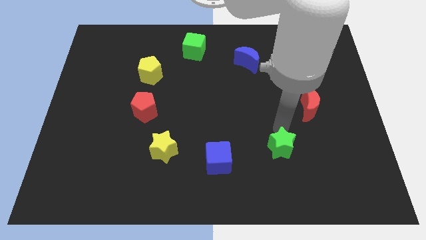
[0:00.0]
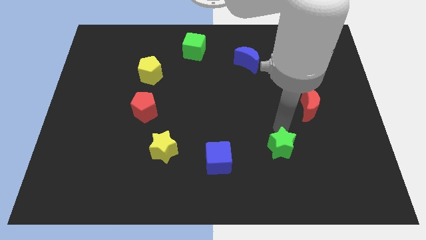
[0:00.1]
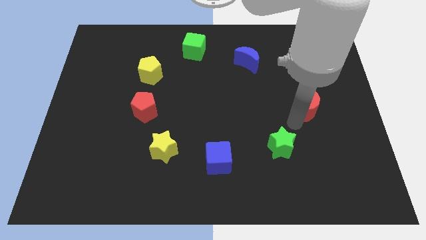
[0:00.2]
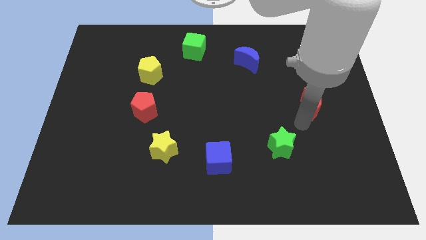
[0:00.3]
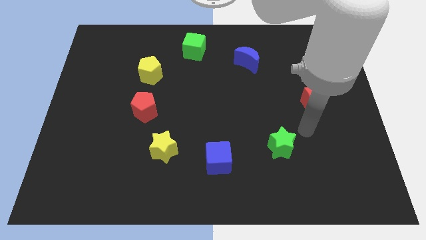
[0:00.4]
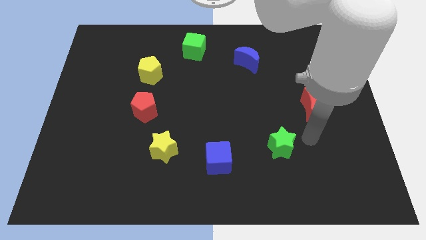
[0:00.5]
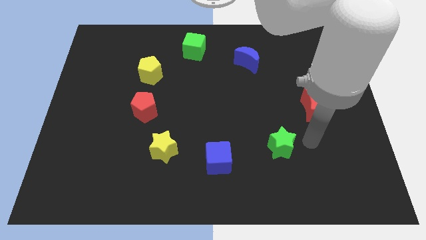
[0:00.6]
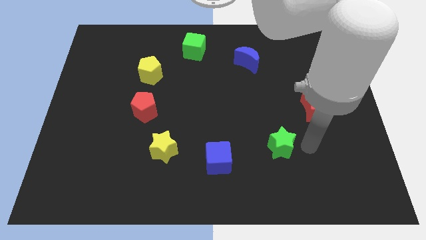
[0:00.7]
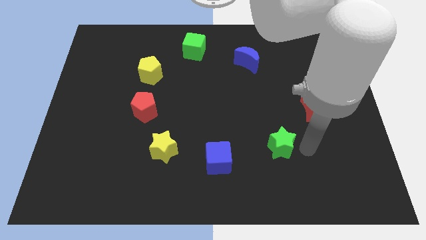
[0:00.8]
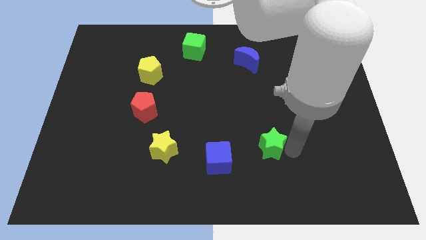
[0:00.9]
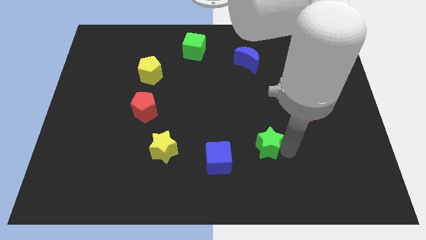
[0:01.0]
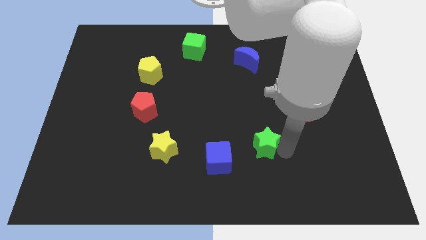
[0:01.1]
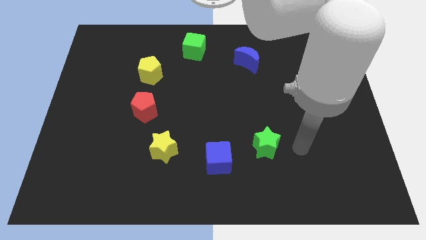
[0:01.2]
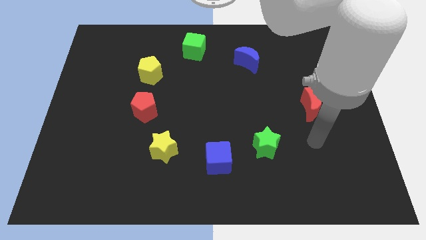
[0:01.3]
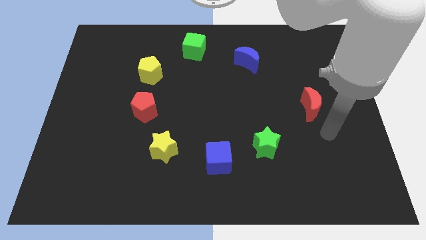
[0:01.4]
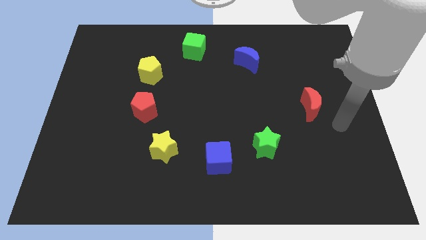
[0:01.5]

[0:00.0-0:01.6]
place the green star diagonally top right to blue cube

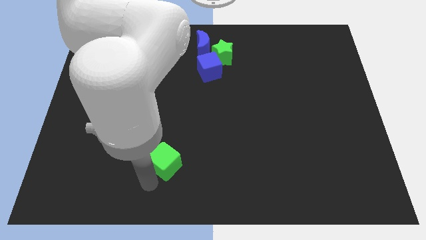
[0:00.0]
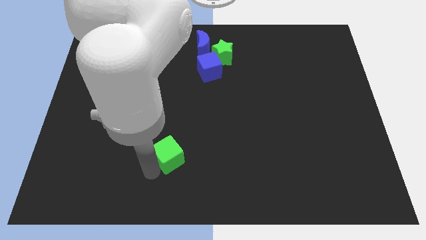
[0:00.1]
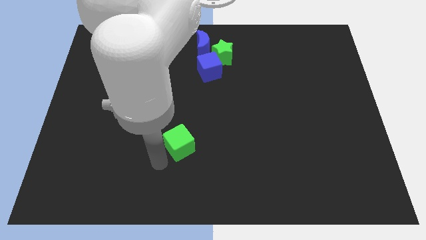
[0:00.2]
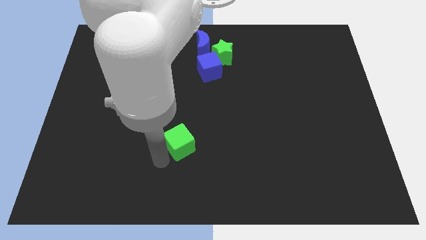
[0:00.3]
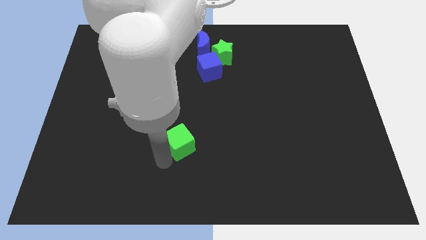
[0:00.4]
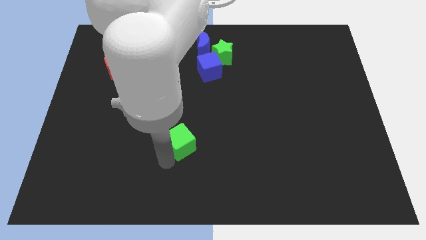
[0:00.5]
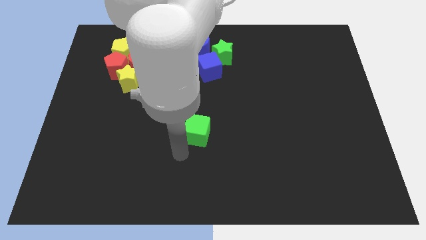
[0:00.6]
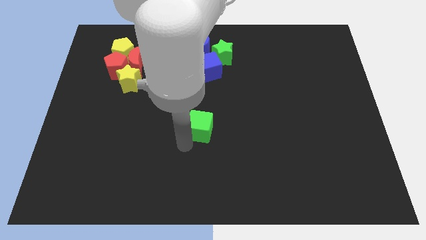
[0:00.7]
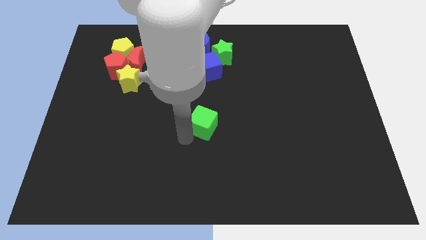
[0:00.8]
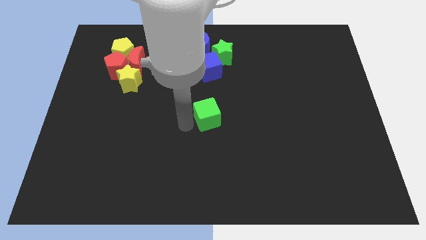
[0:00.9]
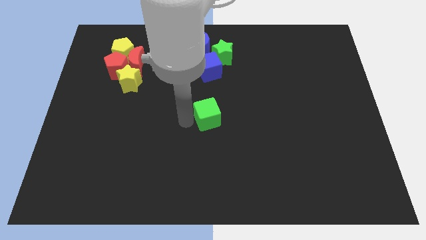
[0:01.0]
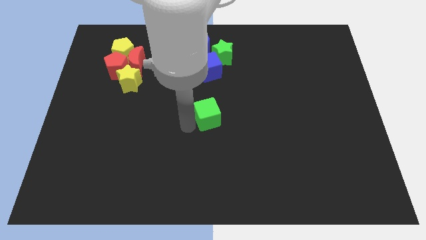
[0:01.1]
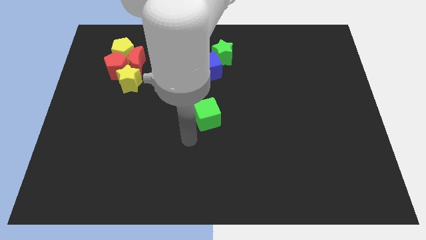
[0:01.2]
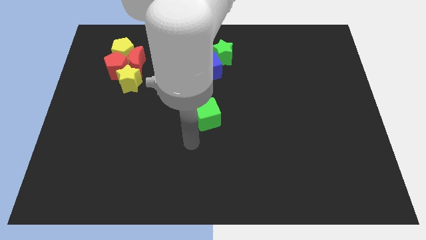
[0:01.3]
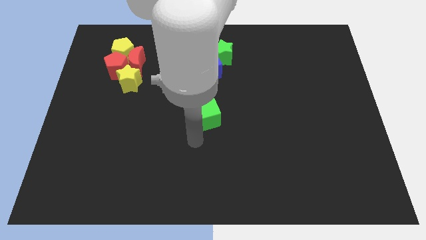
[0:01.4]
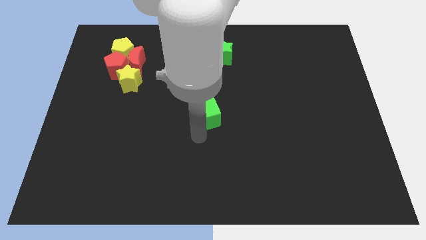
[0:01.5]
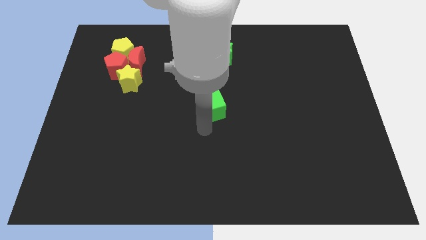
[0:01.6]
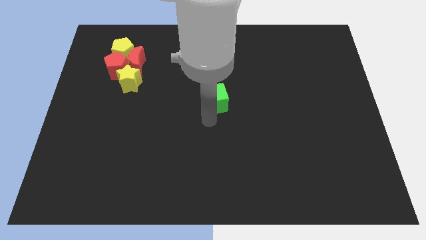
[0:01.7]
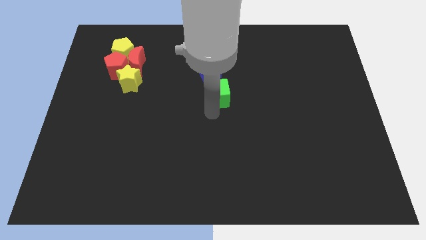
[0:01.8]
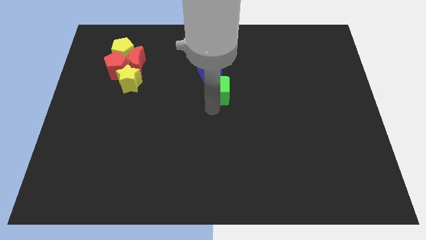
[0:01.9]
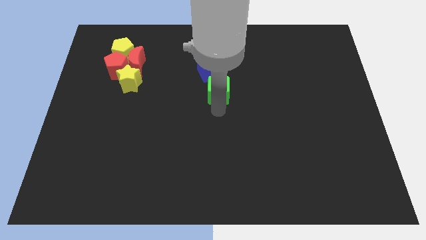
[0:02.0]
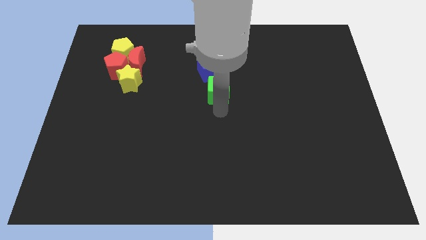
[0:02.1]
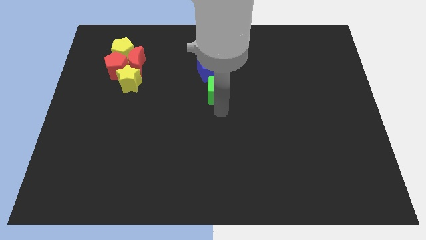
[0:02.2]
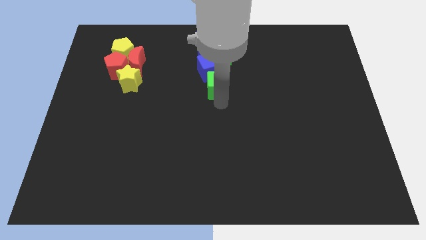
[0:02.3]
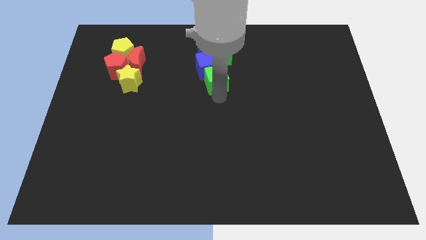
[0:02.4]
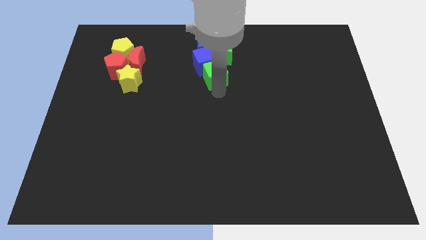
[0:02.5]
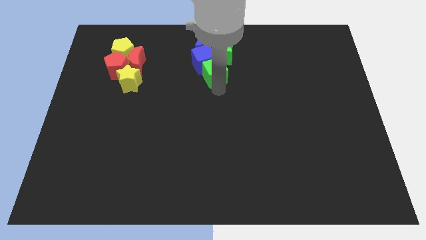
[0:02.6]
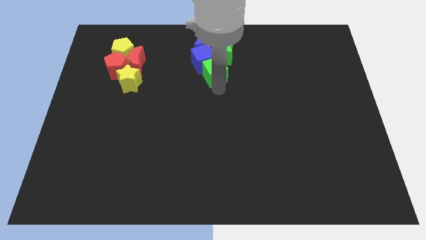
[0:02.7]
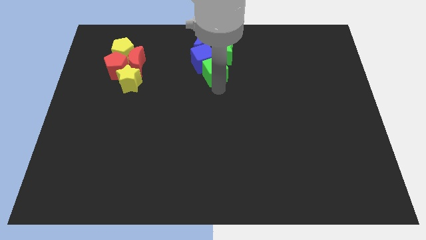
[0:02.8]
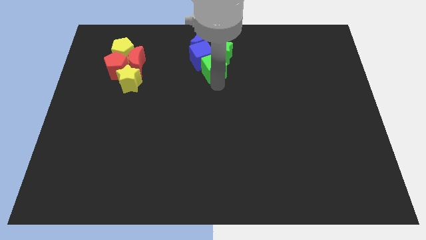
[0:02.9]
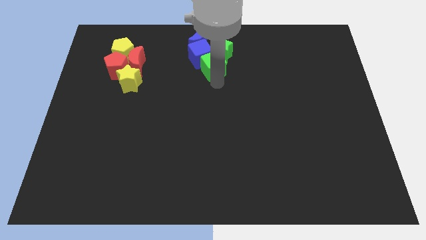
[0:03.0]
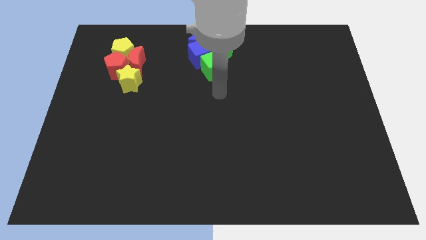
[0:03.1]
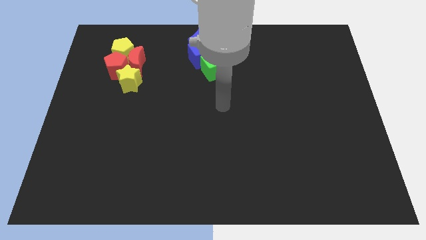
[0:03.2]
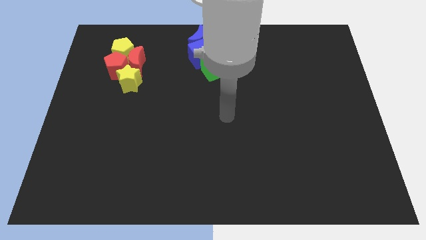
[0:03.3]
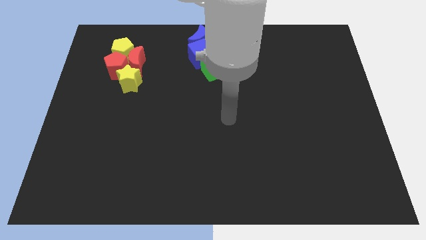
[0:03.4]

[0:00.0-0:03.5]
move the green cube to the top center of the board

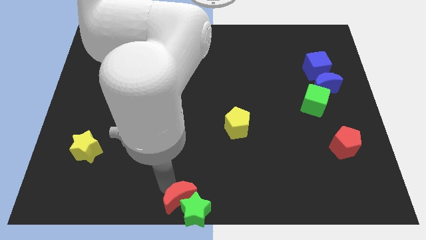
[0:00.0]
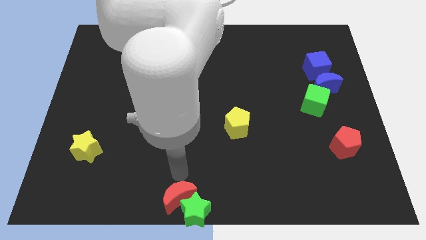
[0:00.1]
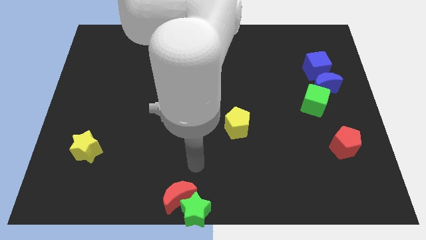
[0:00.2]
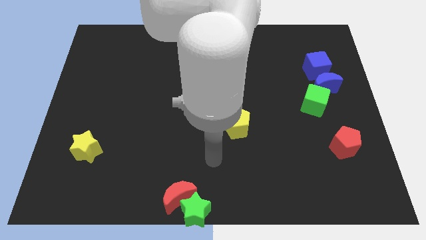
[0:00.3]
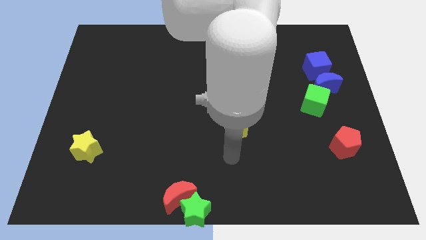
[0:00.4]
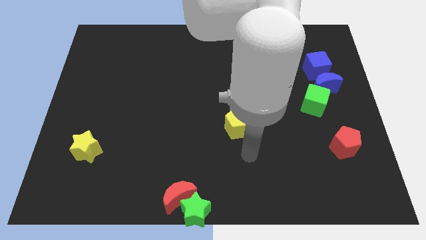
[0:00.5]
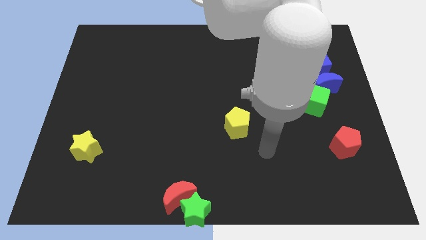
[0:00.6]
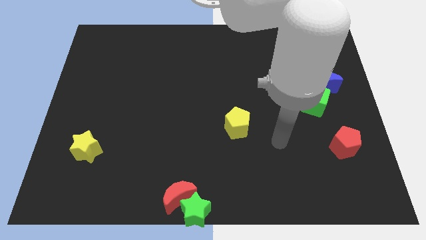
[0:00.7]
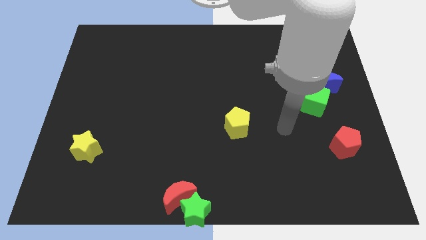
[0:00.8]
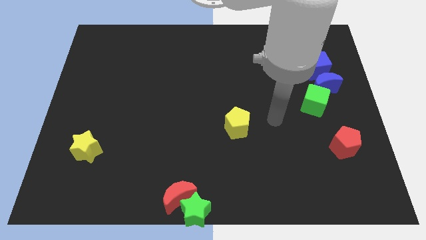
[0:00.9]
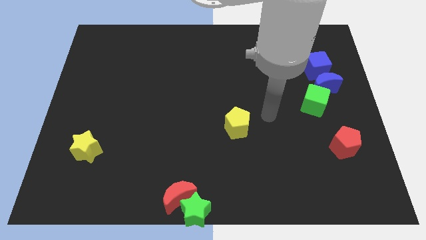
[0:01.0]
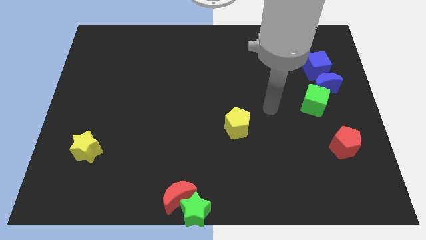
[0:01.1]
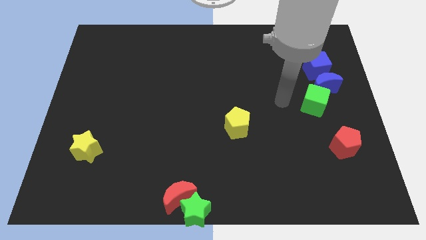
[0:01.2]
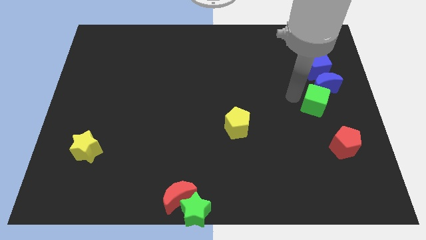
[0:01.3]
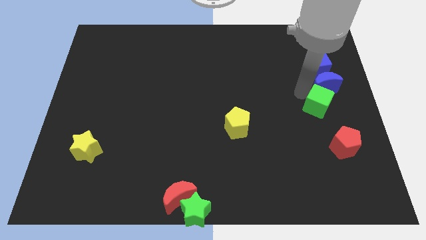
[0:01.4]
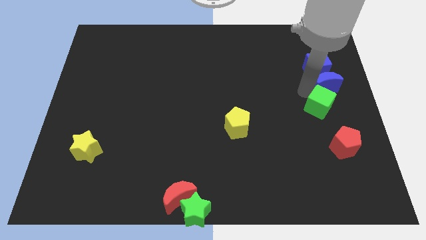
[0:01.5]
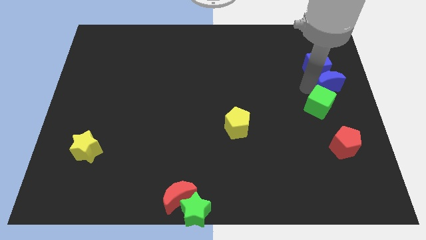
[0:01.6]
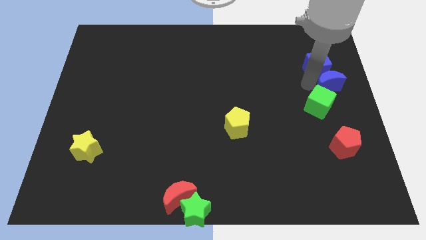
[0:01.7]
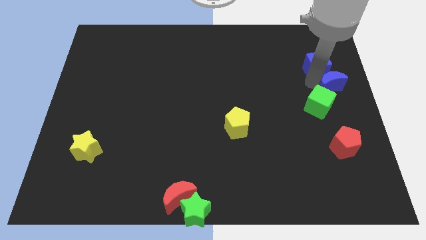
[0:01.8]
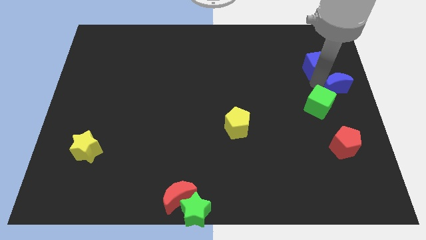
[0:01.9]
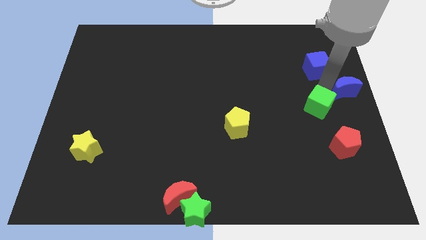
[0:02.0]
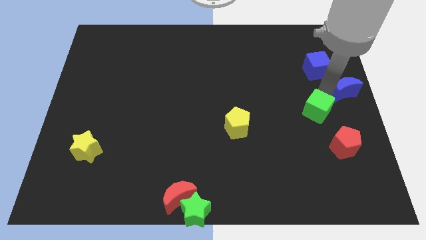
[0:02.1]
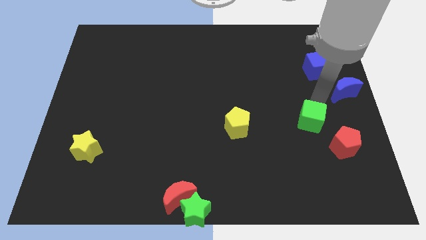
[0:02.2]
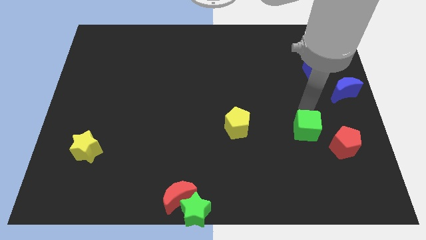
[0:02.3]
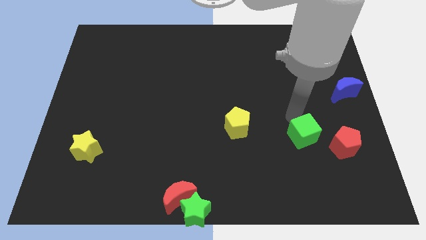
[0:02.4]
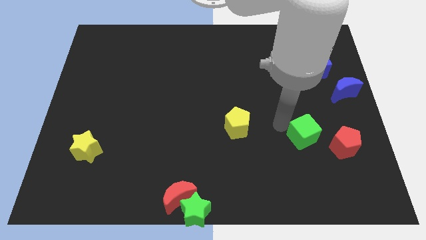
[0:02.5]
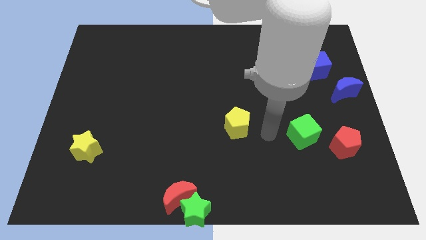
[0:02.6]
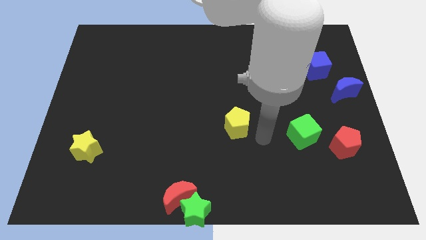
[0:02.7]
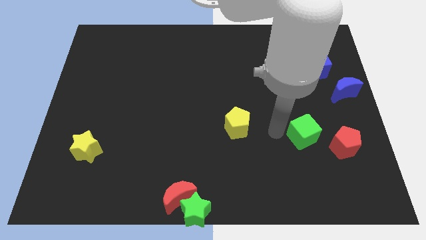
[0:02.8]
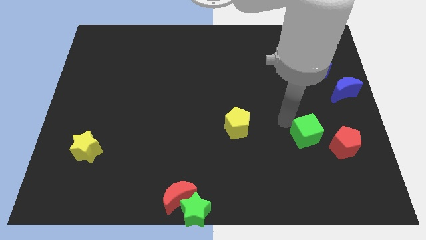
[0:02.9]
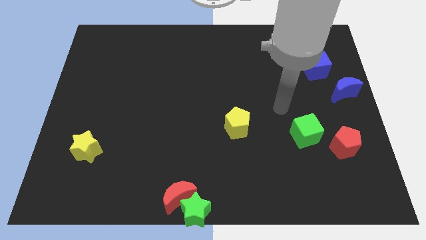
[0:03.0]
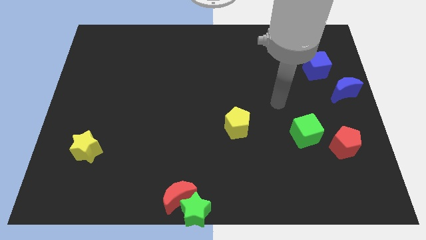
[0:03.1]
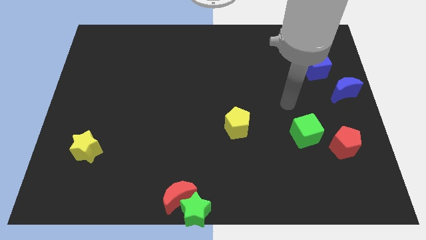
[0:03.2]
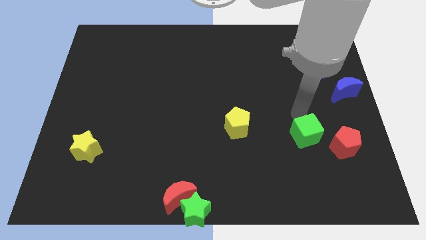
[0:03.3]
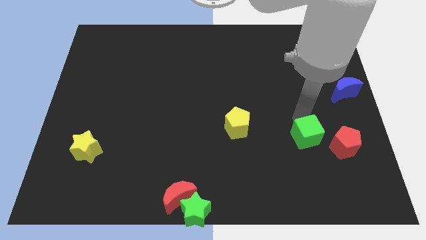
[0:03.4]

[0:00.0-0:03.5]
place the green cube in between the yellow pentagon and red pentagon

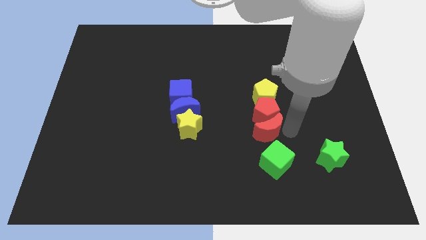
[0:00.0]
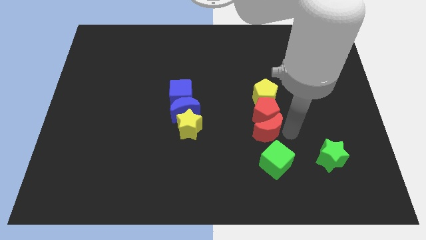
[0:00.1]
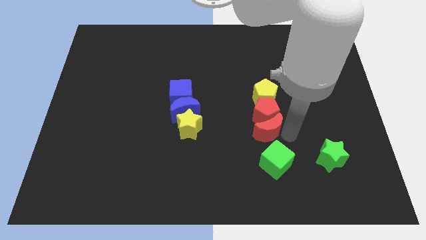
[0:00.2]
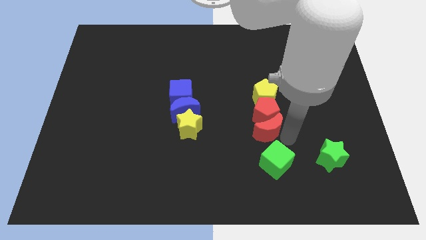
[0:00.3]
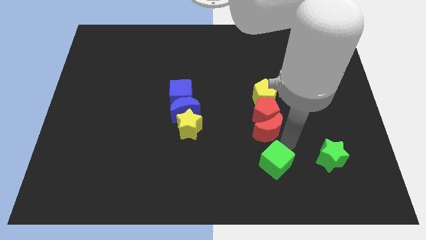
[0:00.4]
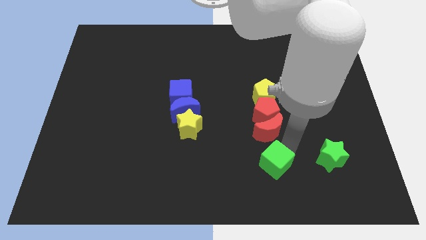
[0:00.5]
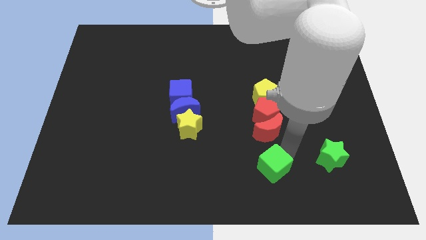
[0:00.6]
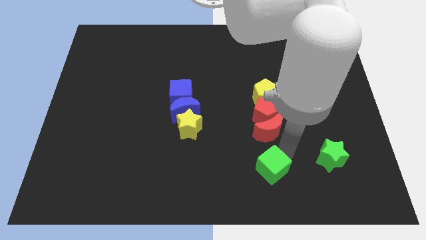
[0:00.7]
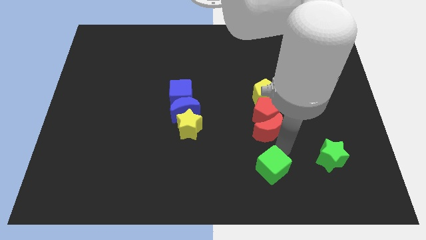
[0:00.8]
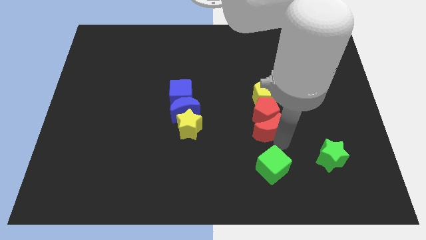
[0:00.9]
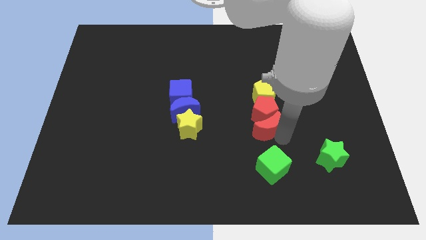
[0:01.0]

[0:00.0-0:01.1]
point your arm between red moon and green cube
